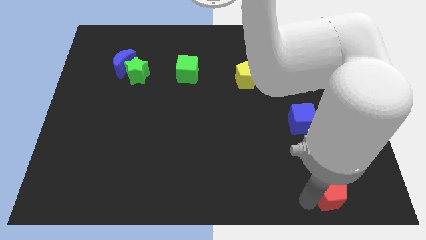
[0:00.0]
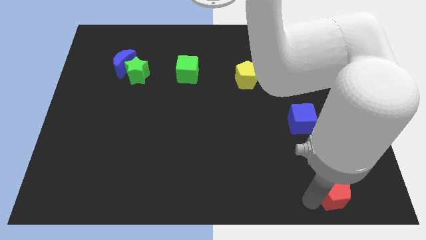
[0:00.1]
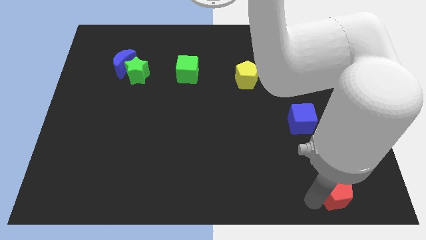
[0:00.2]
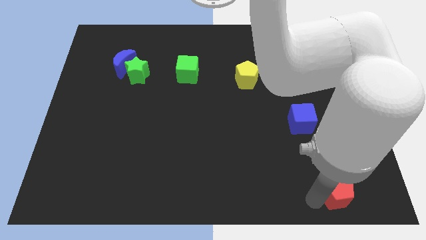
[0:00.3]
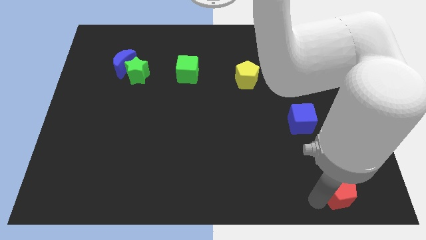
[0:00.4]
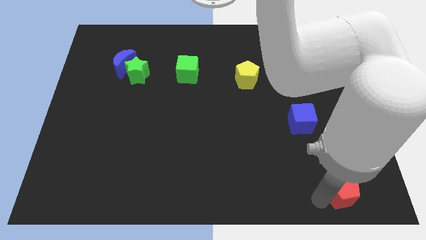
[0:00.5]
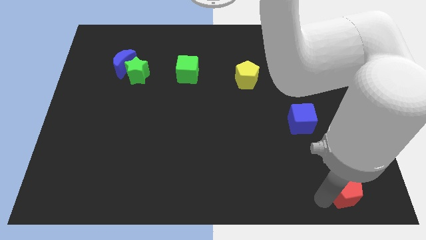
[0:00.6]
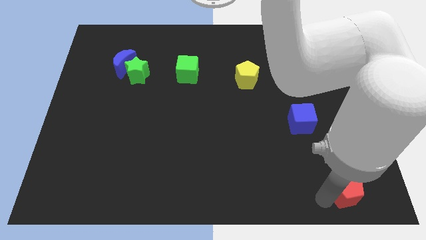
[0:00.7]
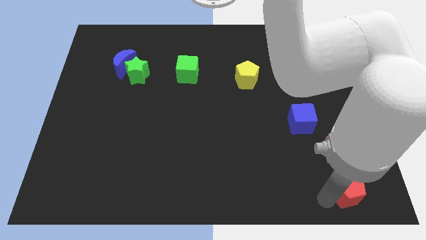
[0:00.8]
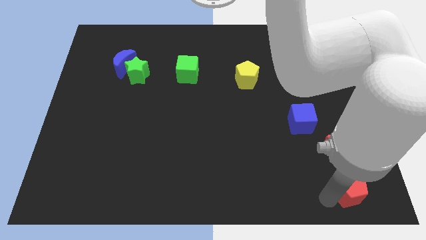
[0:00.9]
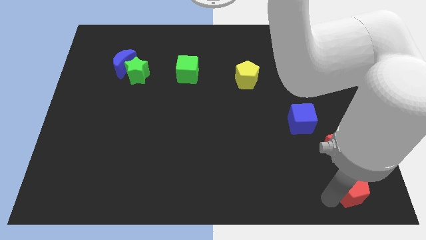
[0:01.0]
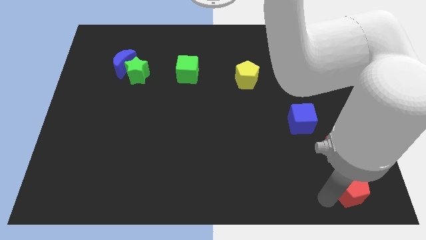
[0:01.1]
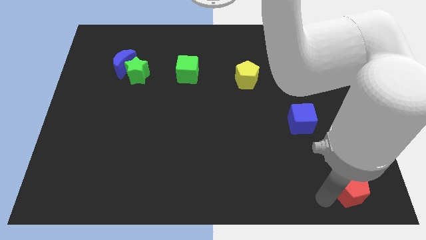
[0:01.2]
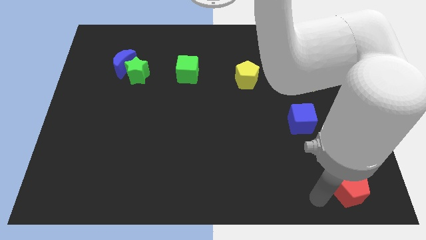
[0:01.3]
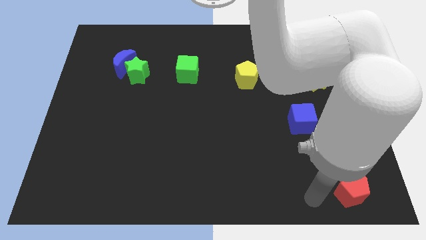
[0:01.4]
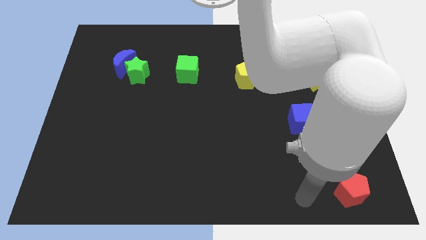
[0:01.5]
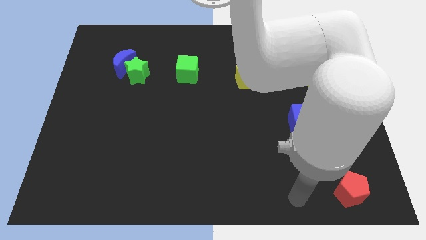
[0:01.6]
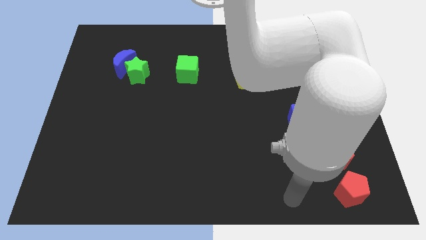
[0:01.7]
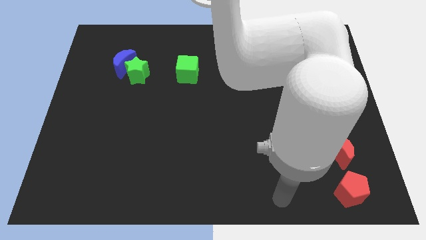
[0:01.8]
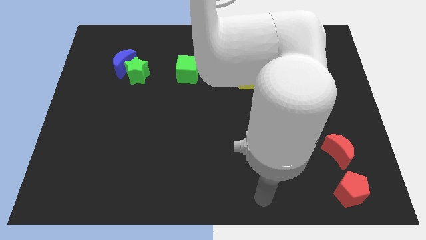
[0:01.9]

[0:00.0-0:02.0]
place the red pentagon below the red crescent

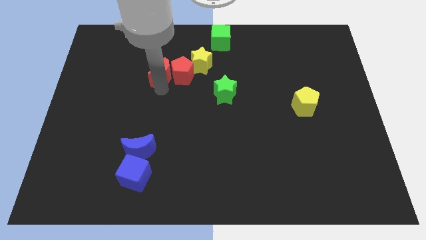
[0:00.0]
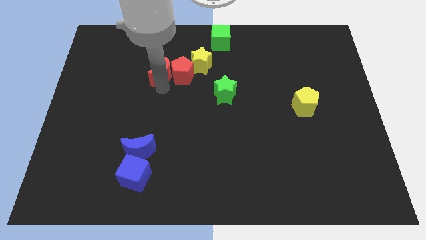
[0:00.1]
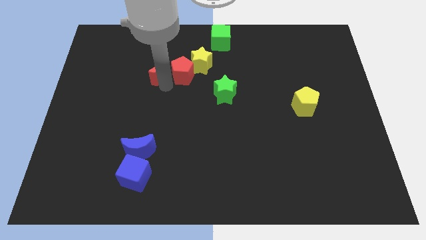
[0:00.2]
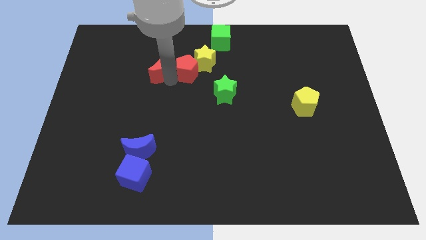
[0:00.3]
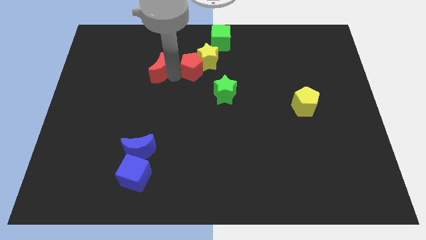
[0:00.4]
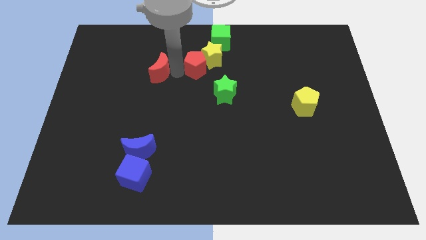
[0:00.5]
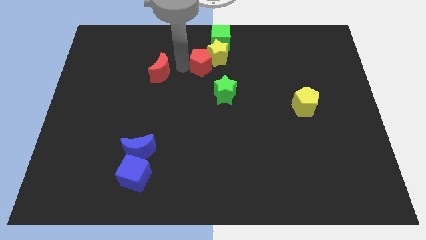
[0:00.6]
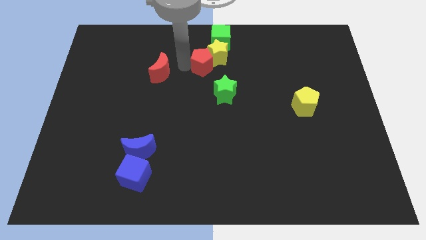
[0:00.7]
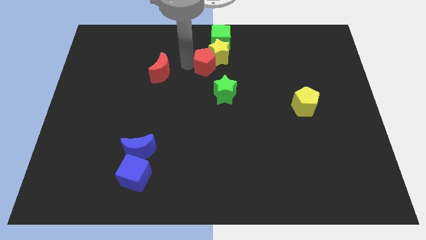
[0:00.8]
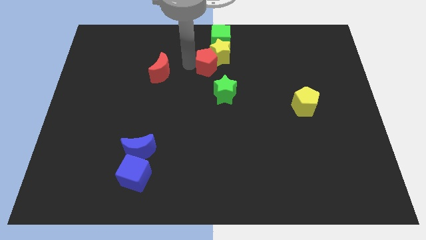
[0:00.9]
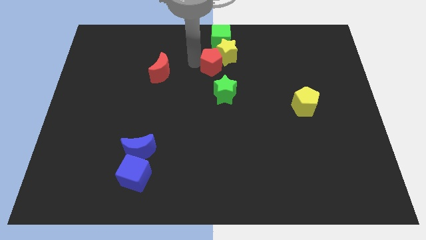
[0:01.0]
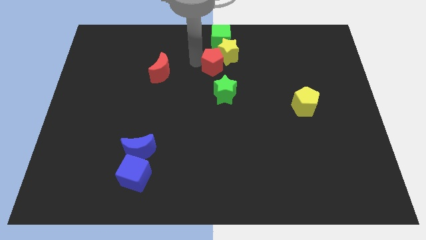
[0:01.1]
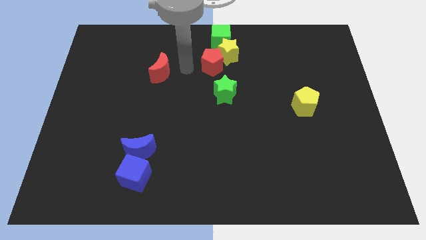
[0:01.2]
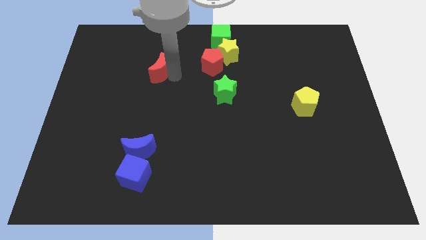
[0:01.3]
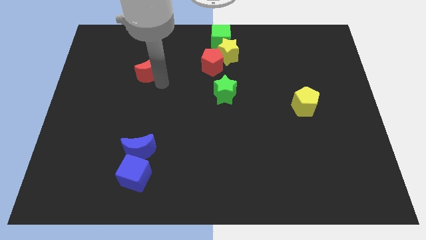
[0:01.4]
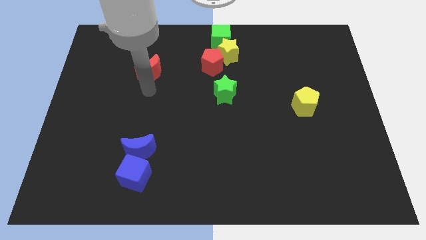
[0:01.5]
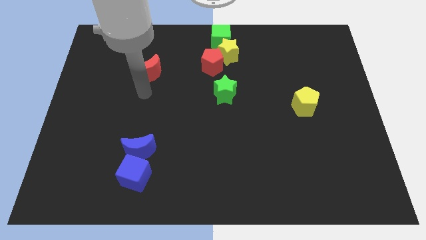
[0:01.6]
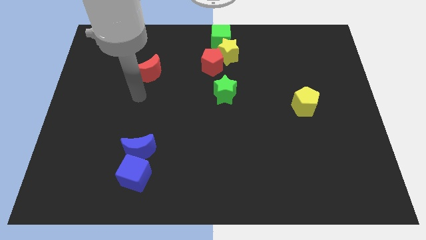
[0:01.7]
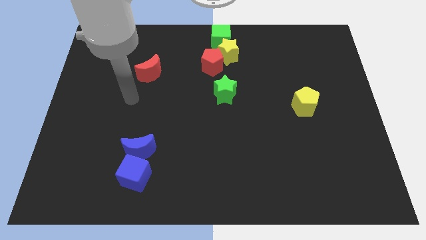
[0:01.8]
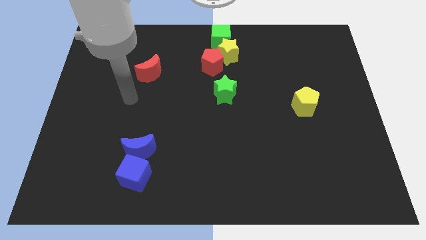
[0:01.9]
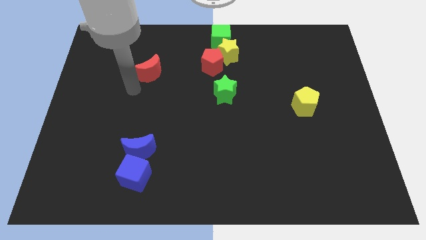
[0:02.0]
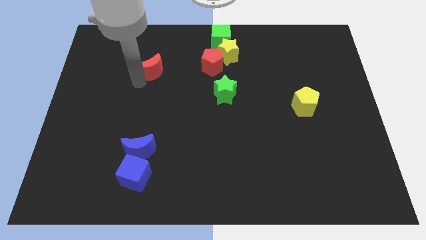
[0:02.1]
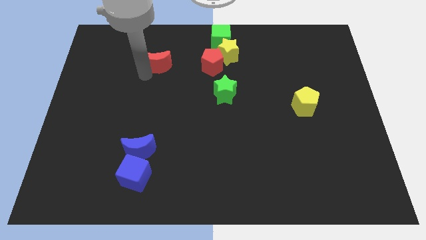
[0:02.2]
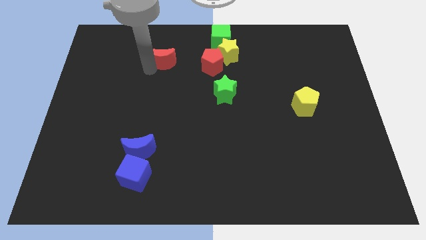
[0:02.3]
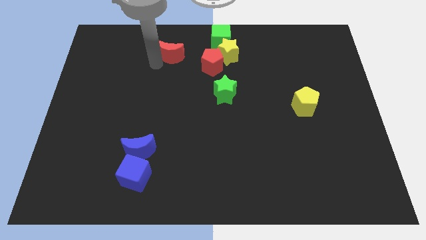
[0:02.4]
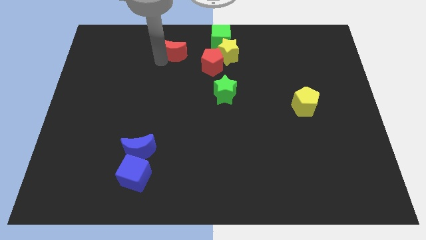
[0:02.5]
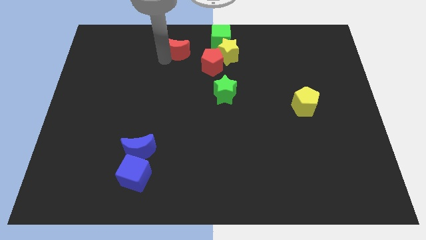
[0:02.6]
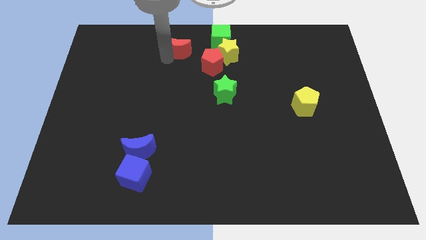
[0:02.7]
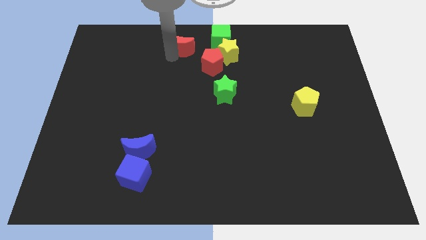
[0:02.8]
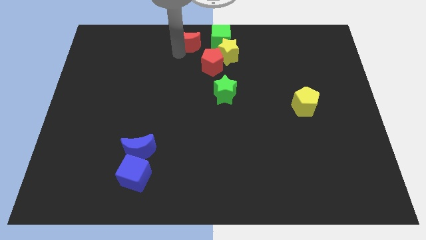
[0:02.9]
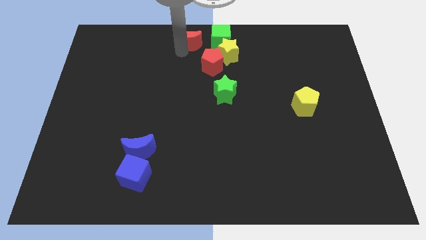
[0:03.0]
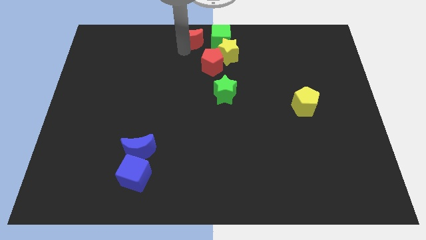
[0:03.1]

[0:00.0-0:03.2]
place the red moon left to the green cube

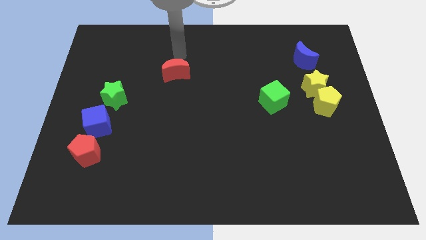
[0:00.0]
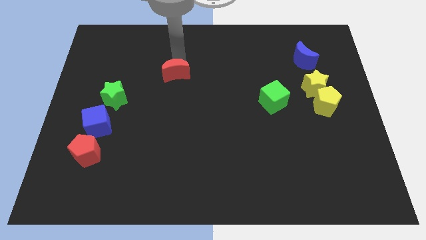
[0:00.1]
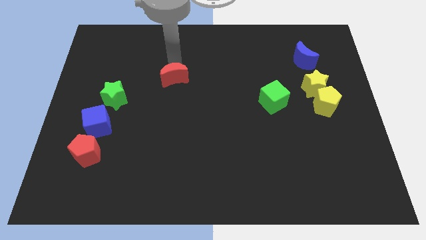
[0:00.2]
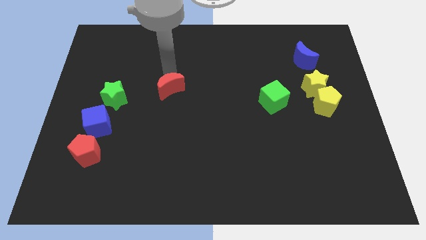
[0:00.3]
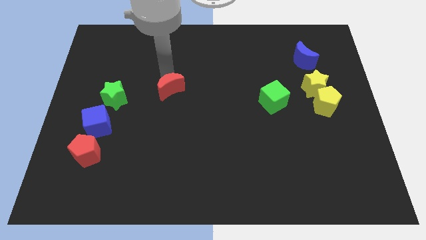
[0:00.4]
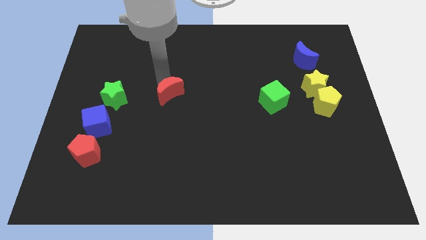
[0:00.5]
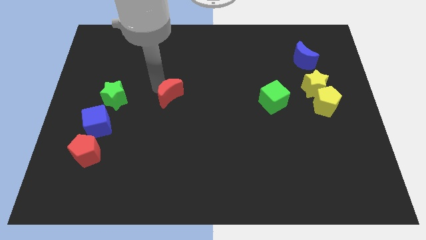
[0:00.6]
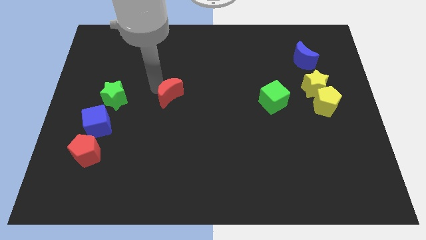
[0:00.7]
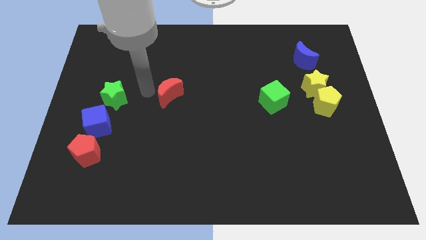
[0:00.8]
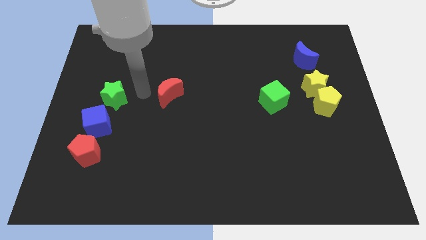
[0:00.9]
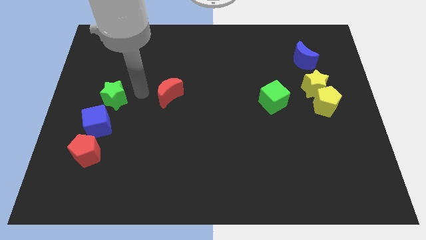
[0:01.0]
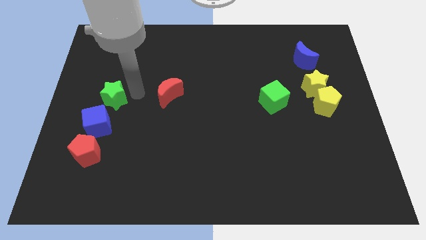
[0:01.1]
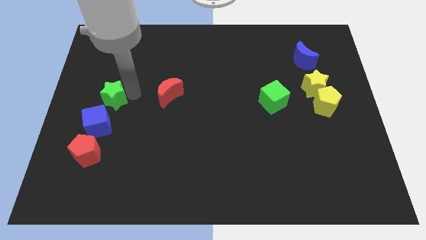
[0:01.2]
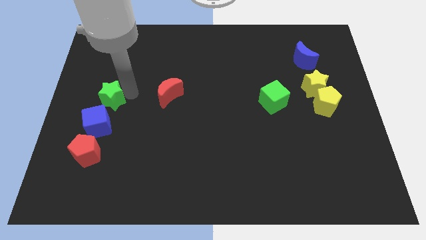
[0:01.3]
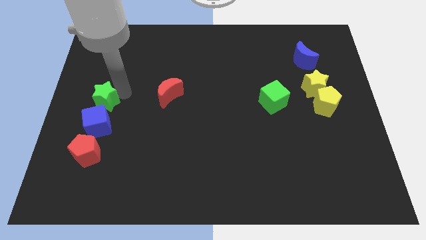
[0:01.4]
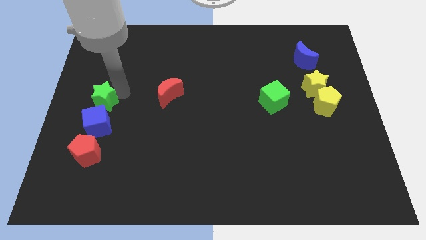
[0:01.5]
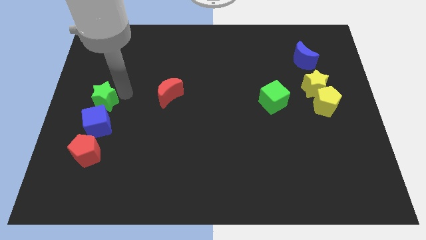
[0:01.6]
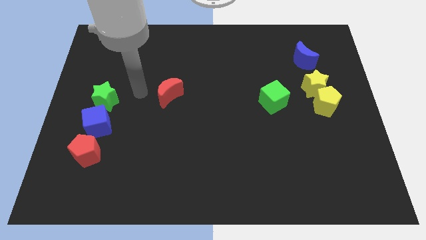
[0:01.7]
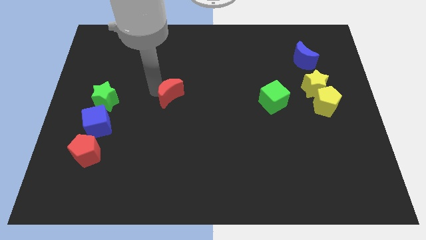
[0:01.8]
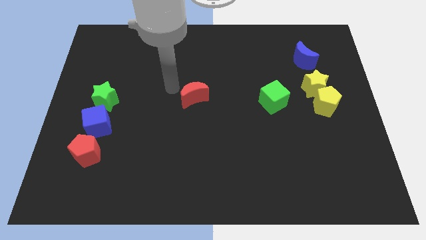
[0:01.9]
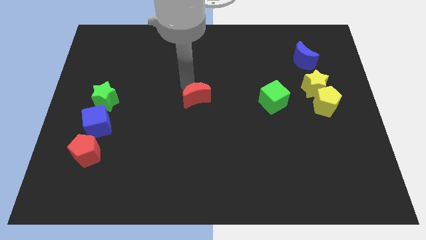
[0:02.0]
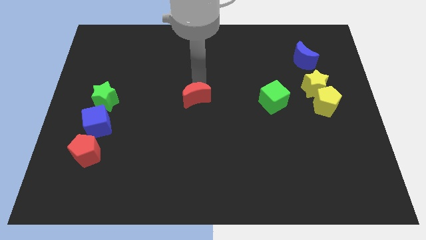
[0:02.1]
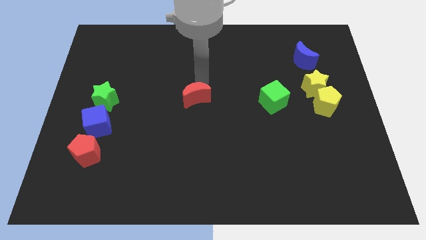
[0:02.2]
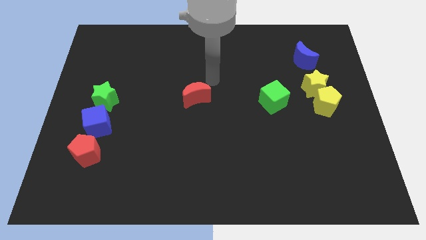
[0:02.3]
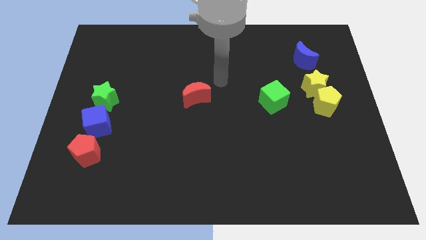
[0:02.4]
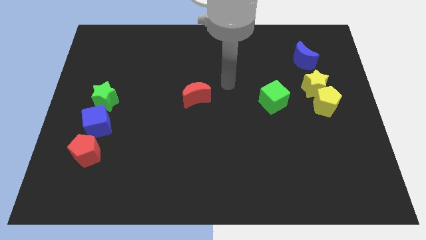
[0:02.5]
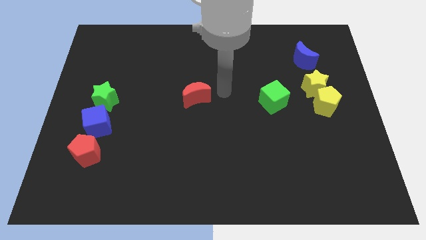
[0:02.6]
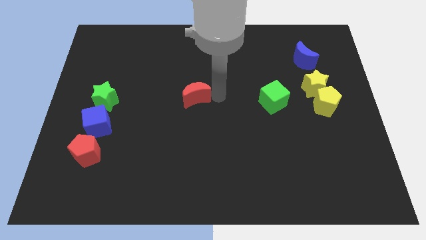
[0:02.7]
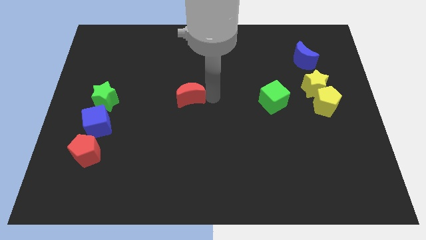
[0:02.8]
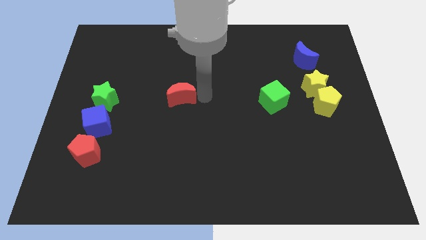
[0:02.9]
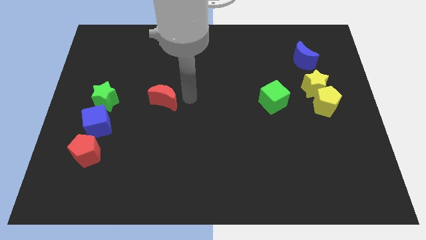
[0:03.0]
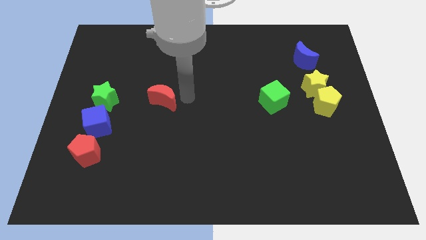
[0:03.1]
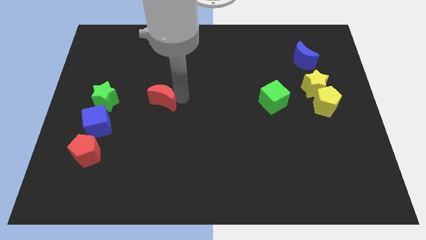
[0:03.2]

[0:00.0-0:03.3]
slide the red moon close to the green star

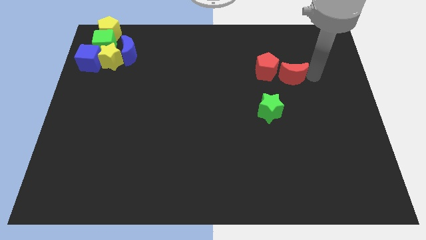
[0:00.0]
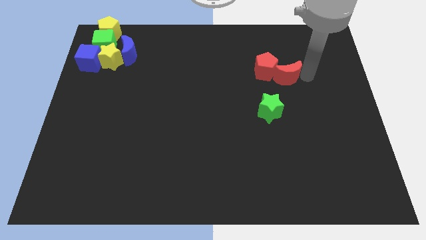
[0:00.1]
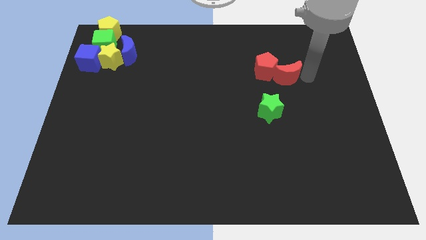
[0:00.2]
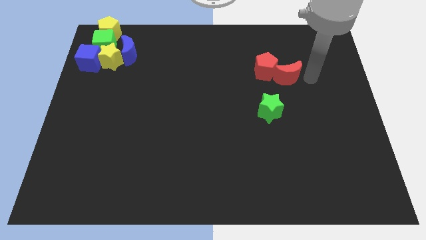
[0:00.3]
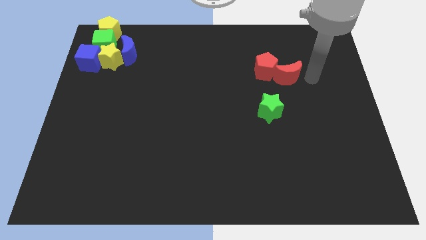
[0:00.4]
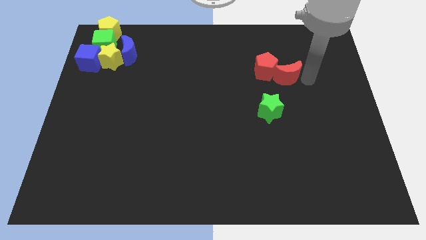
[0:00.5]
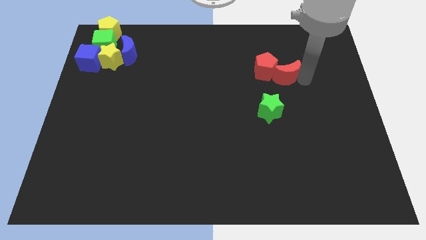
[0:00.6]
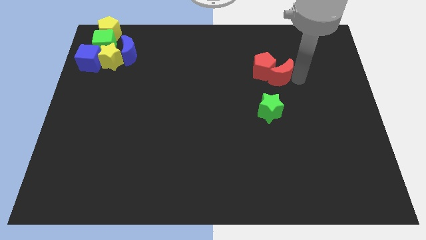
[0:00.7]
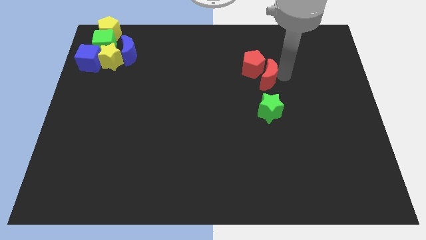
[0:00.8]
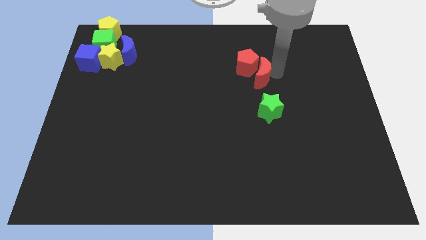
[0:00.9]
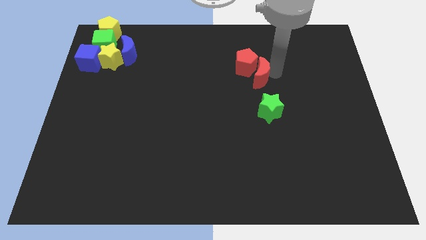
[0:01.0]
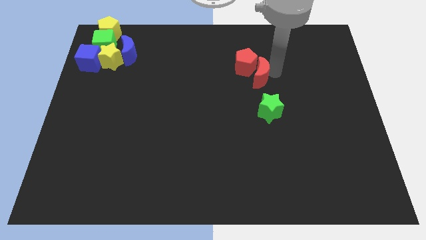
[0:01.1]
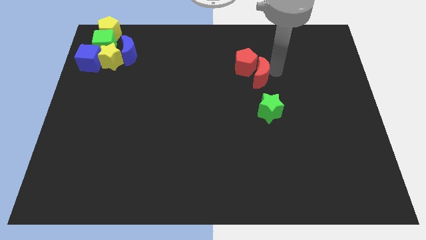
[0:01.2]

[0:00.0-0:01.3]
push the red crescent into the red pentagon
